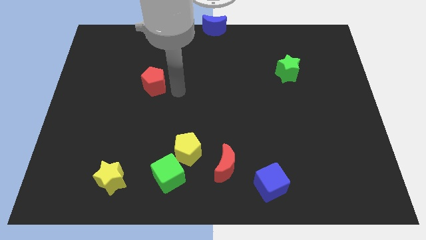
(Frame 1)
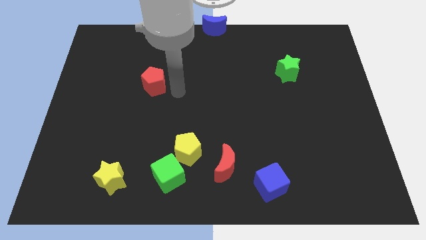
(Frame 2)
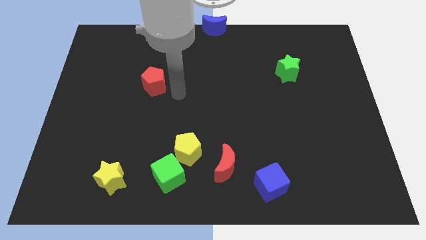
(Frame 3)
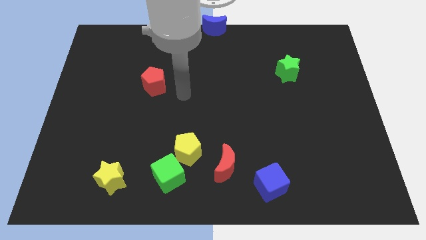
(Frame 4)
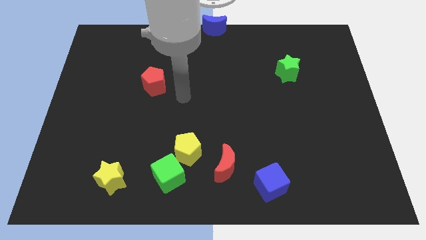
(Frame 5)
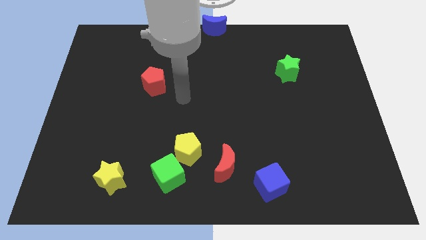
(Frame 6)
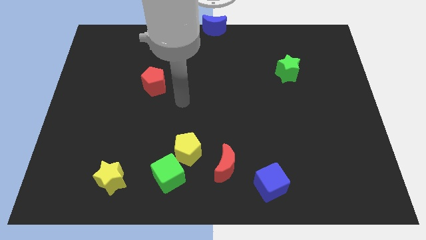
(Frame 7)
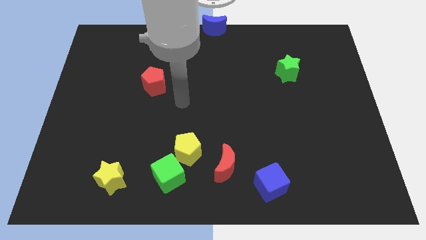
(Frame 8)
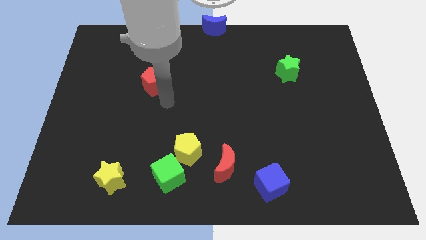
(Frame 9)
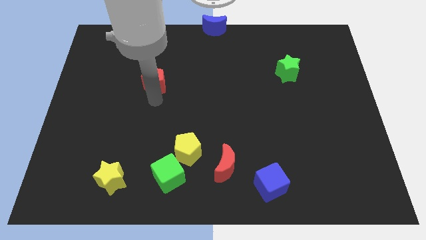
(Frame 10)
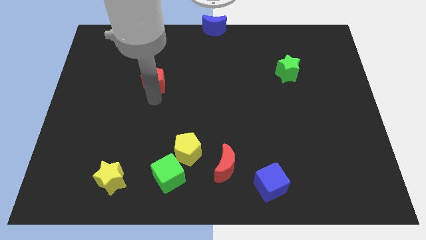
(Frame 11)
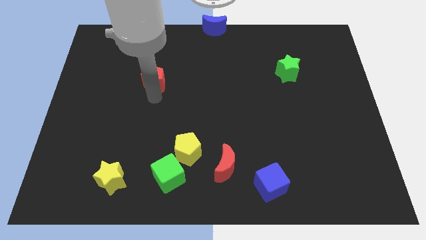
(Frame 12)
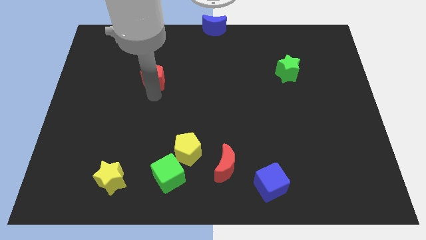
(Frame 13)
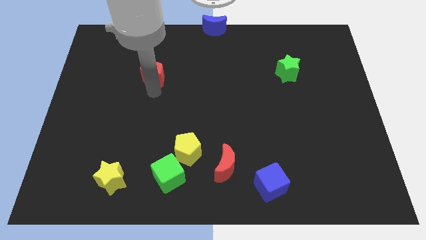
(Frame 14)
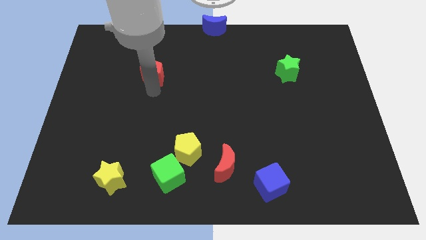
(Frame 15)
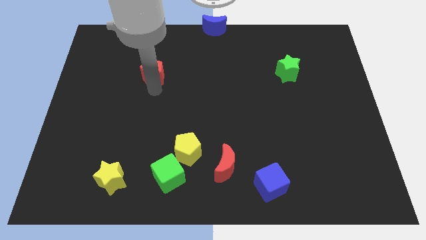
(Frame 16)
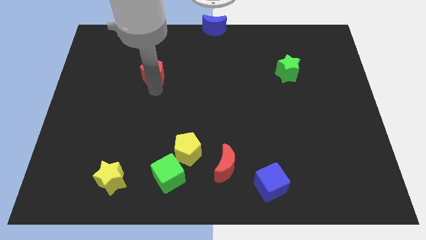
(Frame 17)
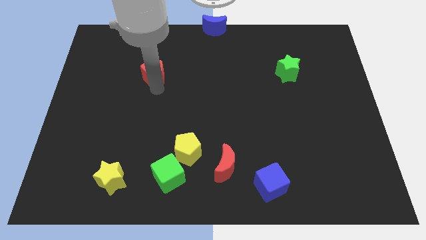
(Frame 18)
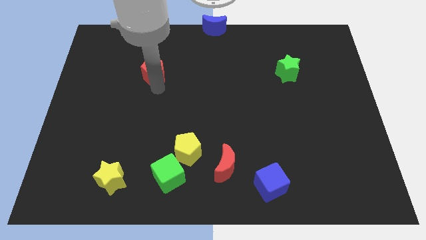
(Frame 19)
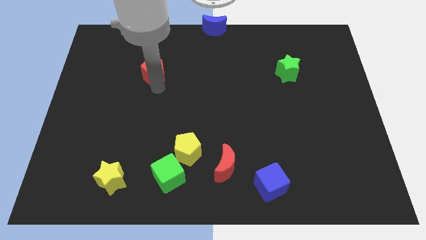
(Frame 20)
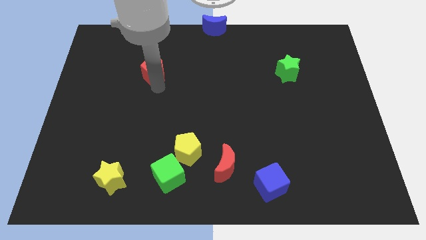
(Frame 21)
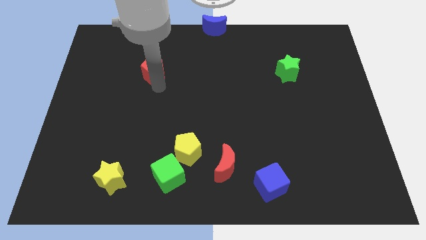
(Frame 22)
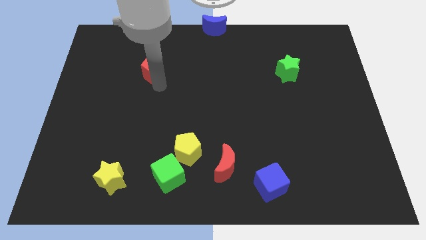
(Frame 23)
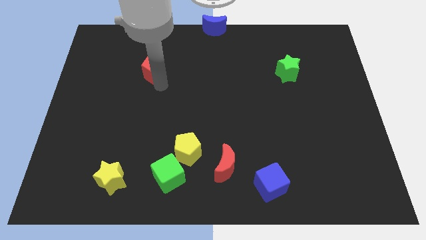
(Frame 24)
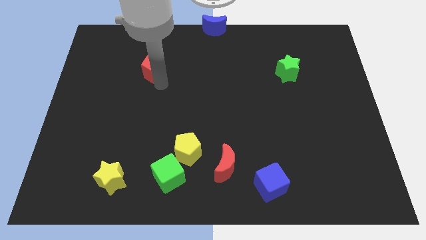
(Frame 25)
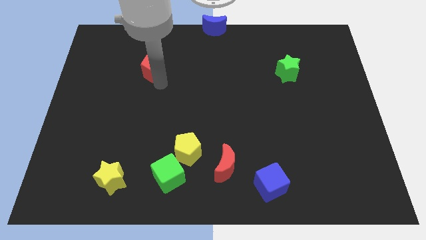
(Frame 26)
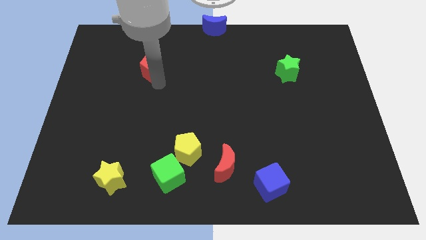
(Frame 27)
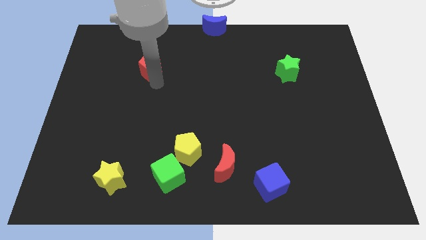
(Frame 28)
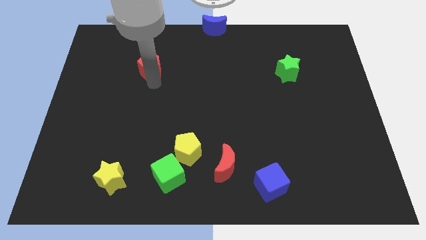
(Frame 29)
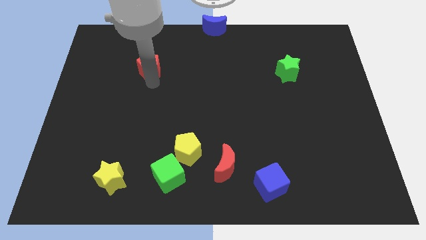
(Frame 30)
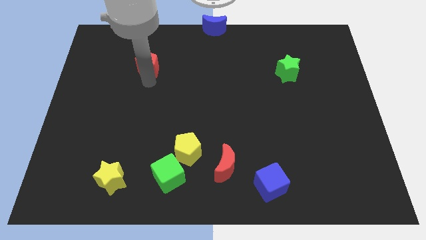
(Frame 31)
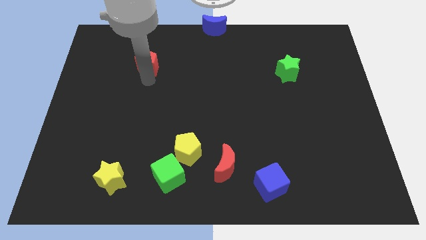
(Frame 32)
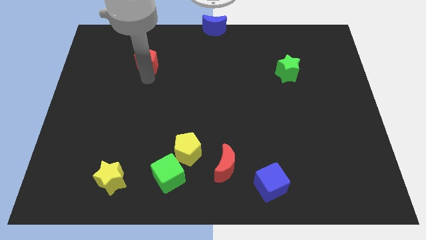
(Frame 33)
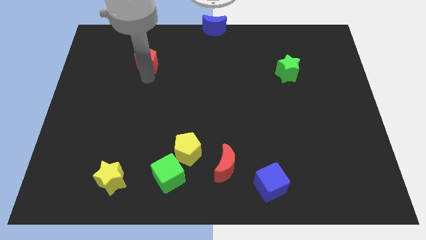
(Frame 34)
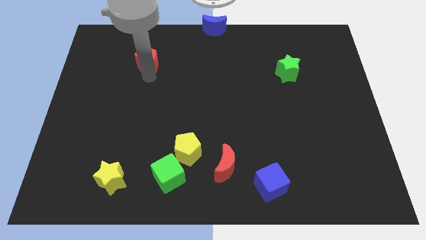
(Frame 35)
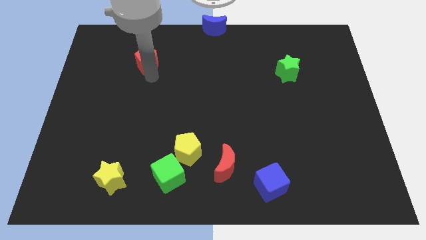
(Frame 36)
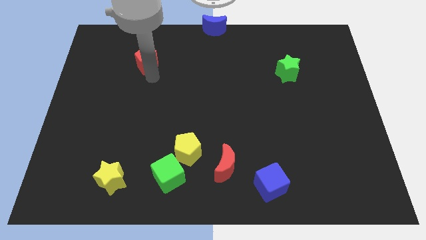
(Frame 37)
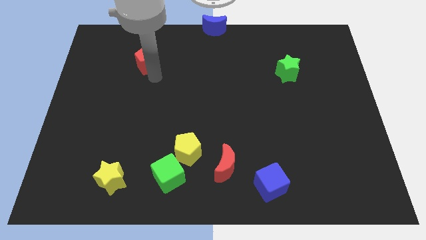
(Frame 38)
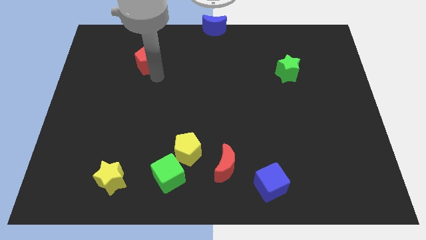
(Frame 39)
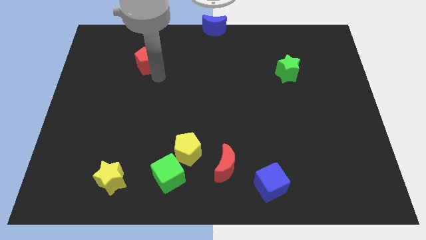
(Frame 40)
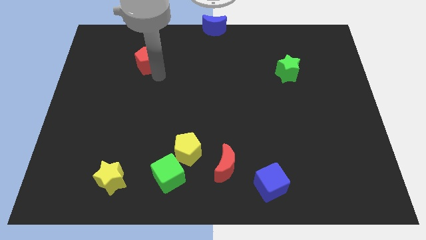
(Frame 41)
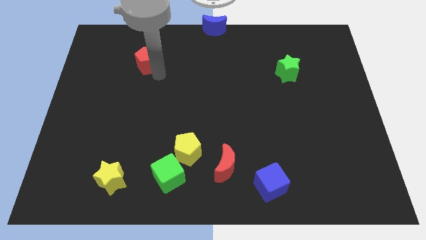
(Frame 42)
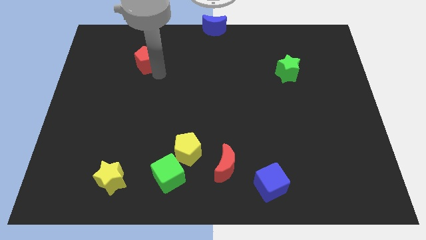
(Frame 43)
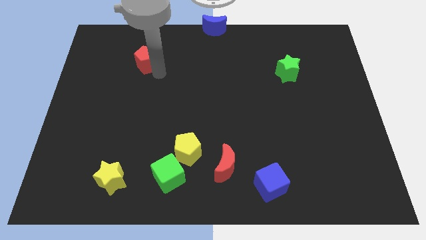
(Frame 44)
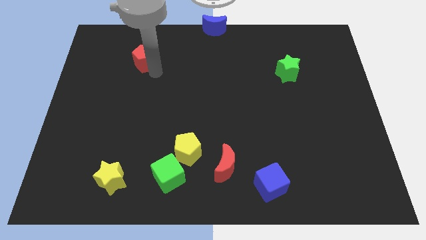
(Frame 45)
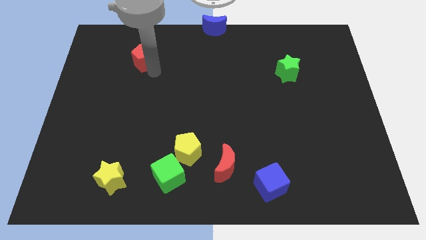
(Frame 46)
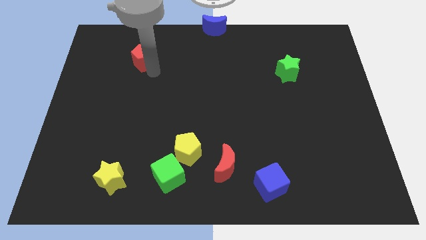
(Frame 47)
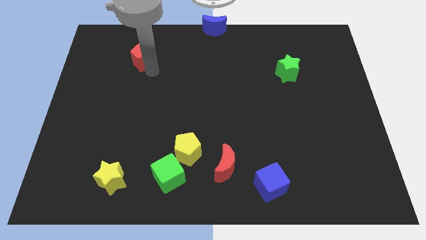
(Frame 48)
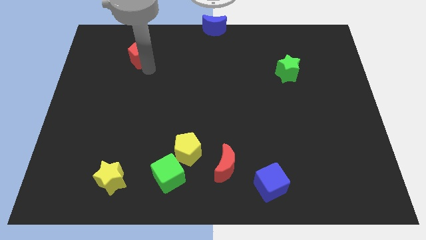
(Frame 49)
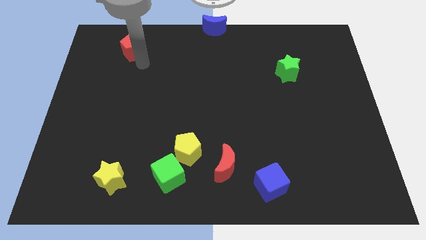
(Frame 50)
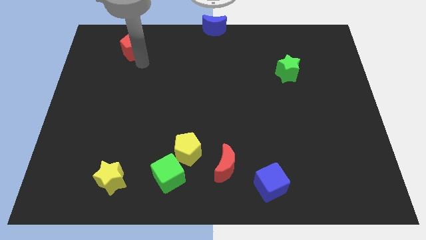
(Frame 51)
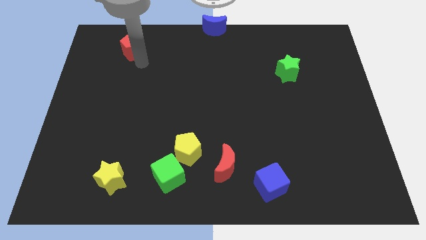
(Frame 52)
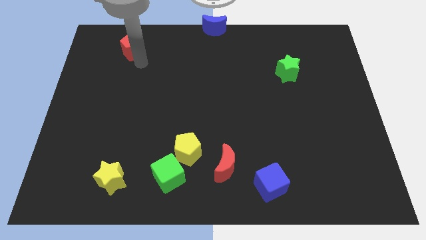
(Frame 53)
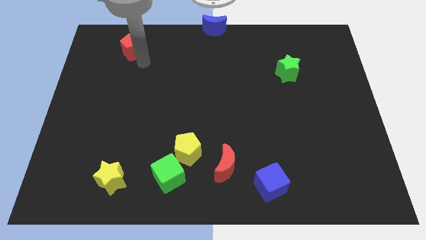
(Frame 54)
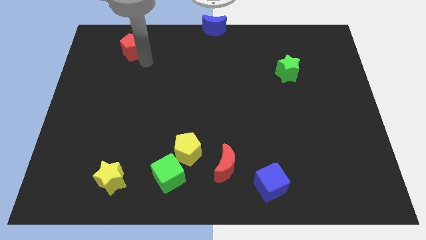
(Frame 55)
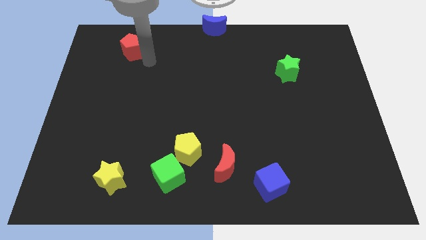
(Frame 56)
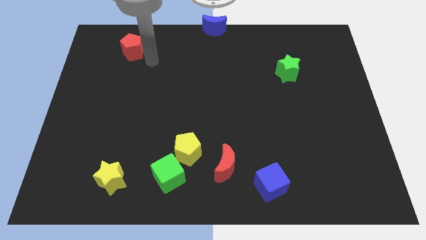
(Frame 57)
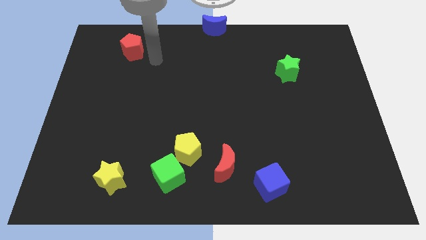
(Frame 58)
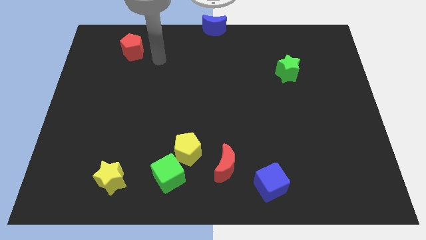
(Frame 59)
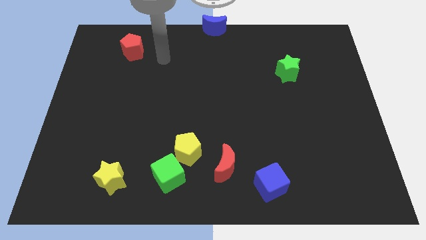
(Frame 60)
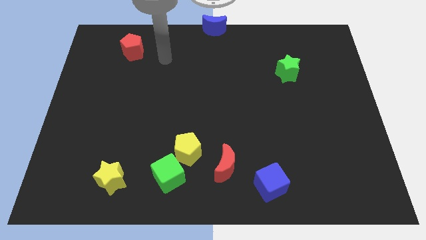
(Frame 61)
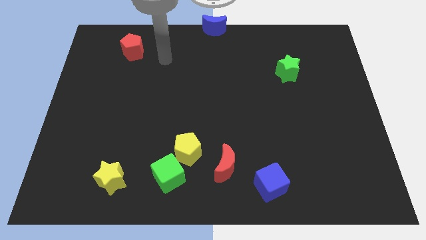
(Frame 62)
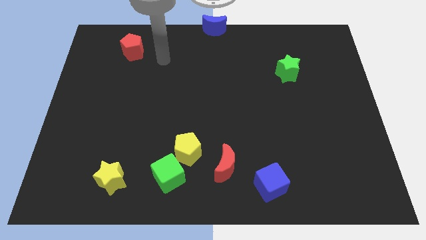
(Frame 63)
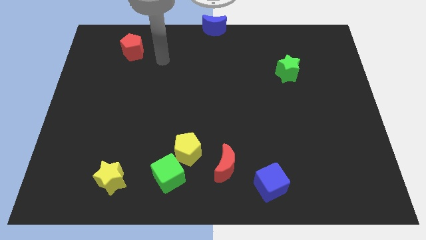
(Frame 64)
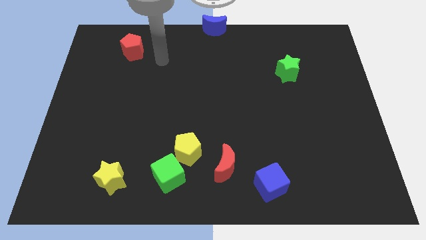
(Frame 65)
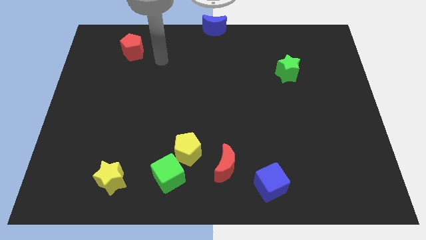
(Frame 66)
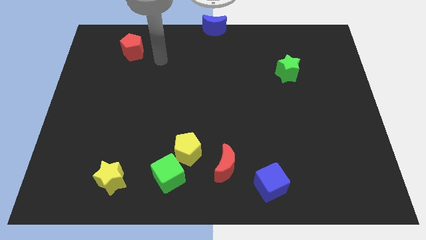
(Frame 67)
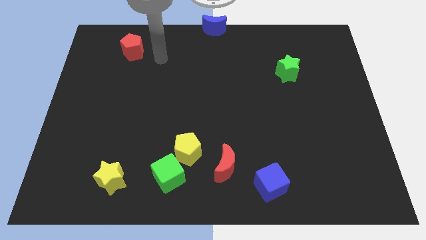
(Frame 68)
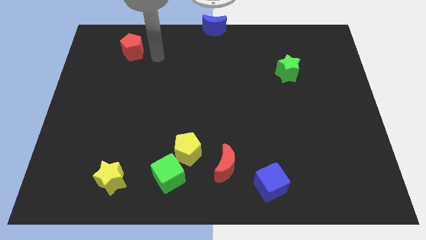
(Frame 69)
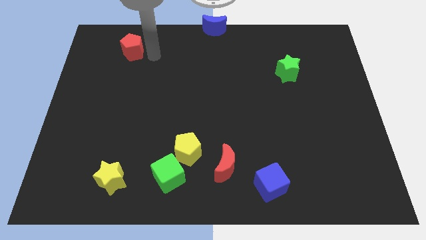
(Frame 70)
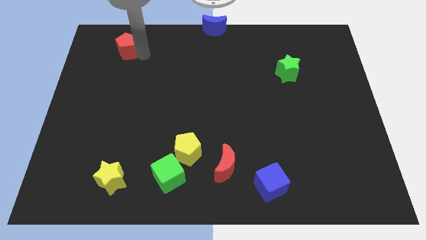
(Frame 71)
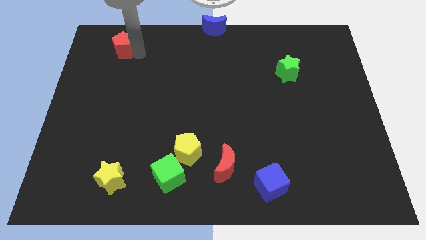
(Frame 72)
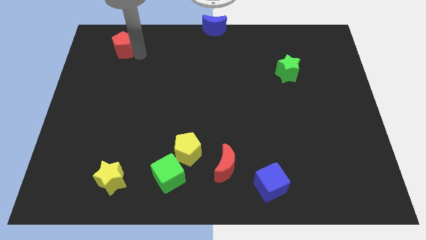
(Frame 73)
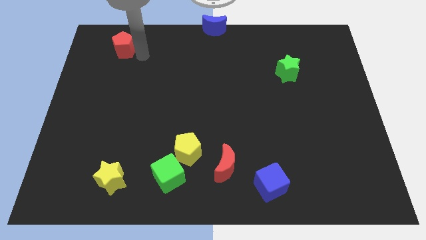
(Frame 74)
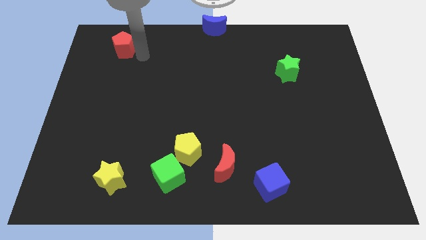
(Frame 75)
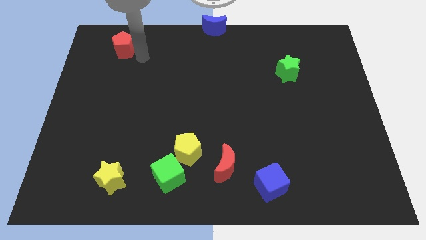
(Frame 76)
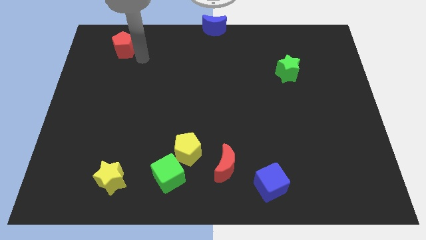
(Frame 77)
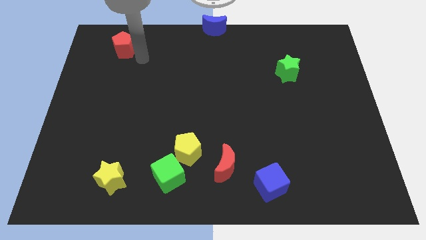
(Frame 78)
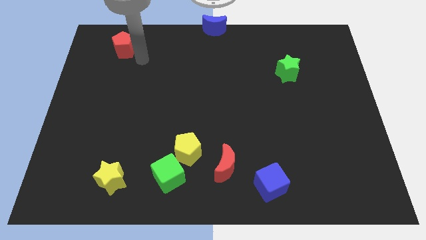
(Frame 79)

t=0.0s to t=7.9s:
push the red pentagon upward

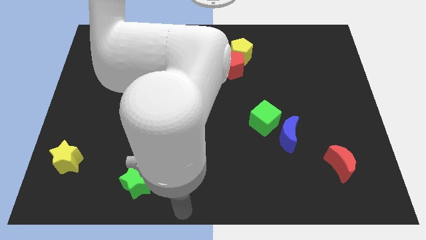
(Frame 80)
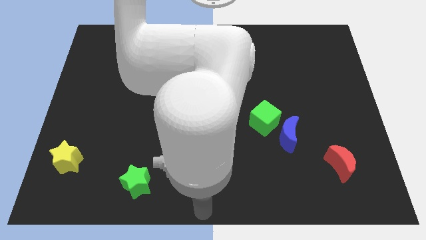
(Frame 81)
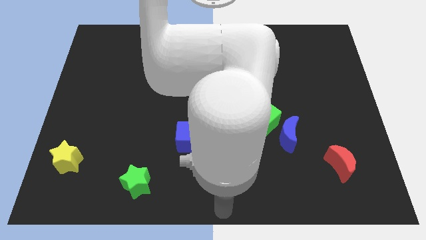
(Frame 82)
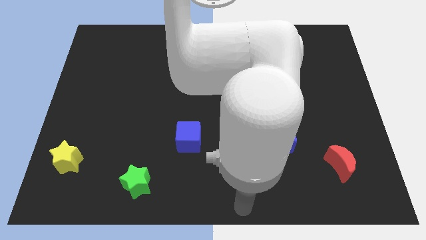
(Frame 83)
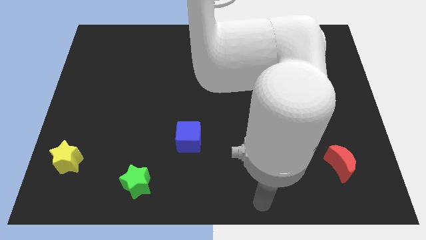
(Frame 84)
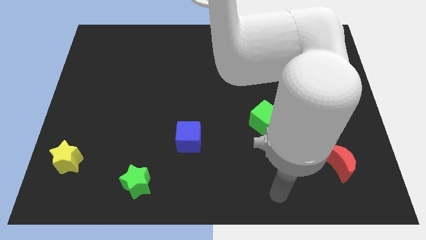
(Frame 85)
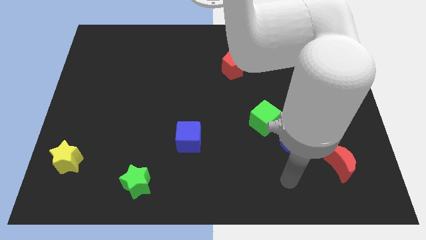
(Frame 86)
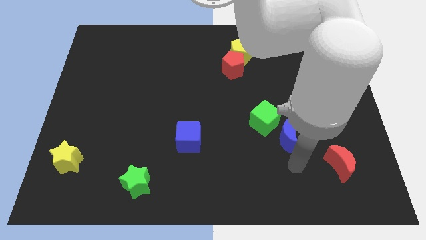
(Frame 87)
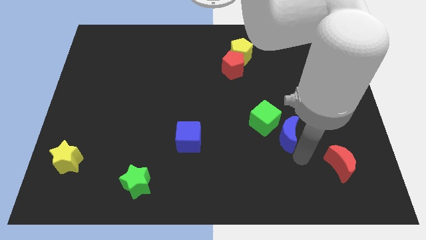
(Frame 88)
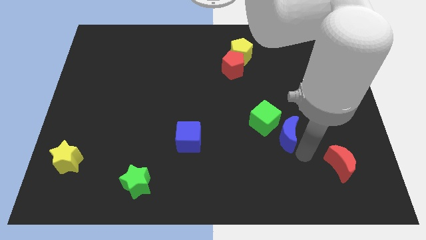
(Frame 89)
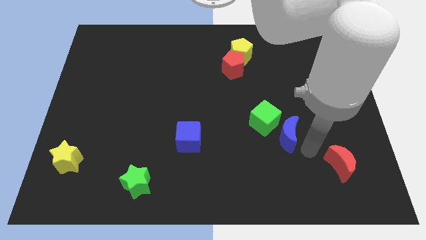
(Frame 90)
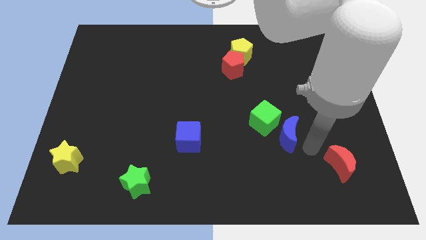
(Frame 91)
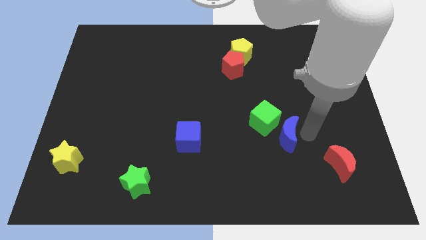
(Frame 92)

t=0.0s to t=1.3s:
move the arm to the right side of the blue moon
